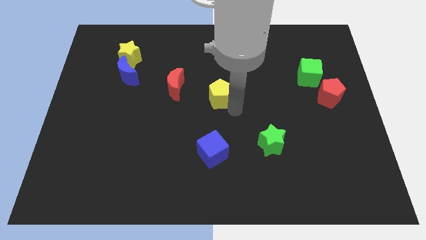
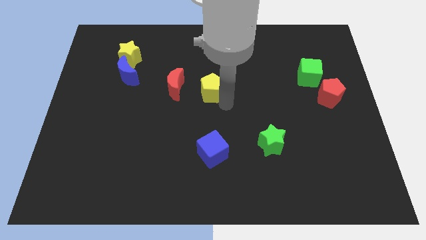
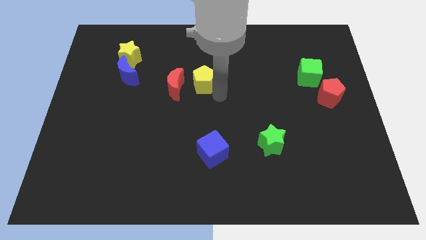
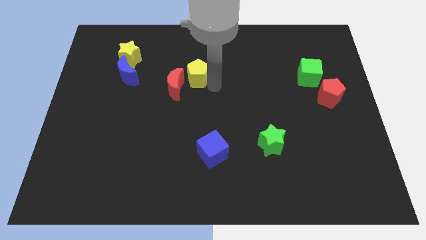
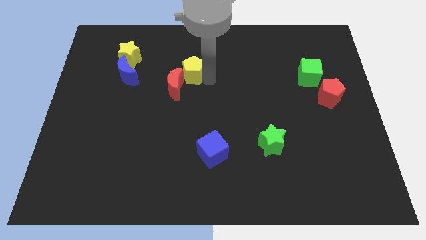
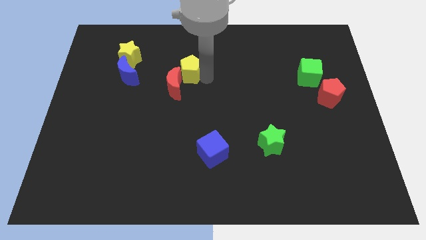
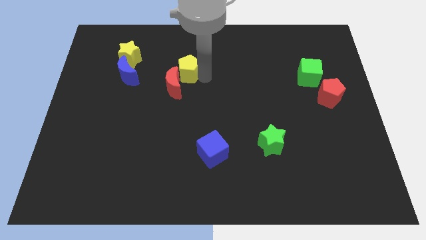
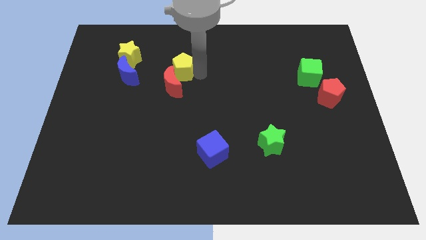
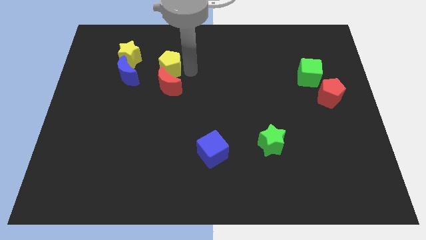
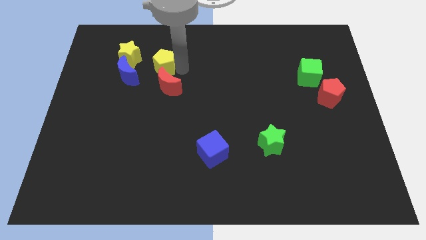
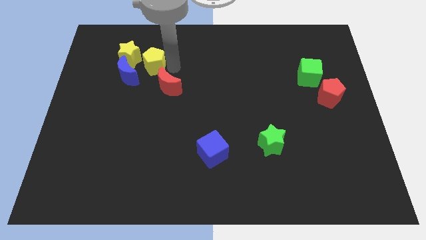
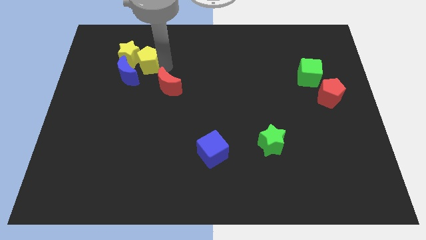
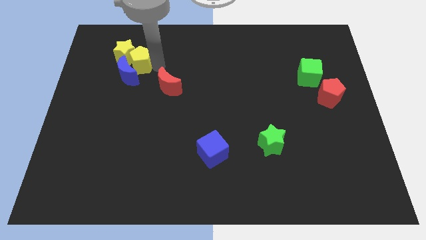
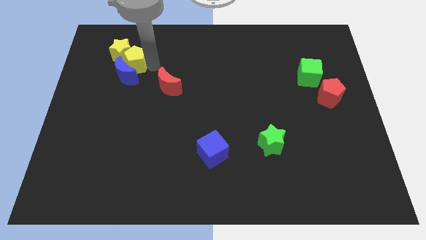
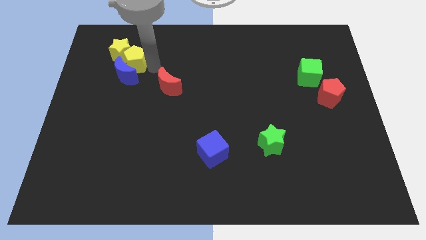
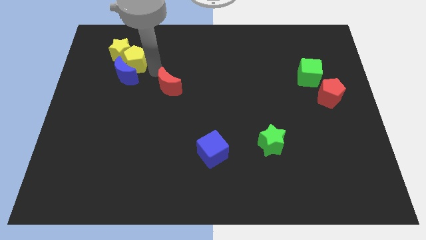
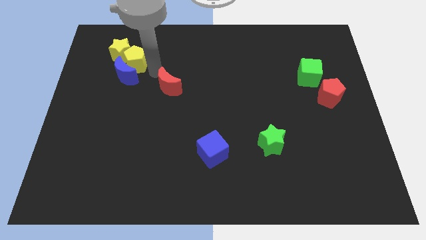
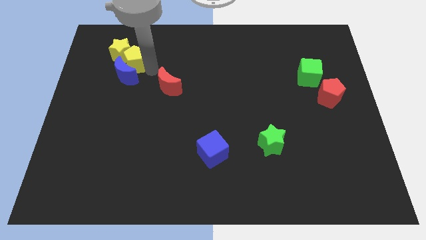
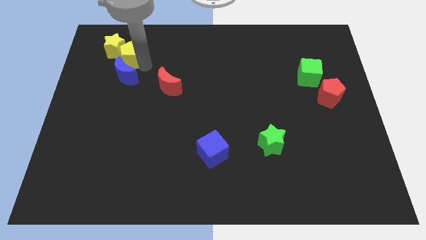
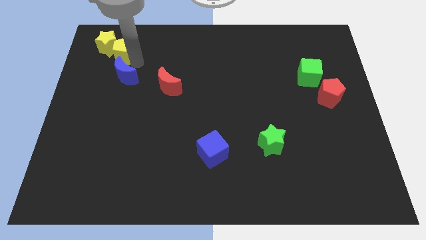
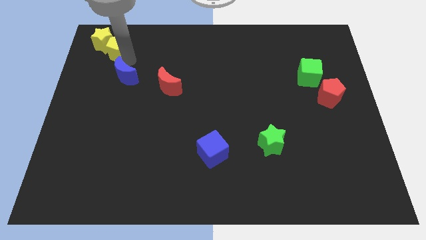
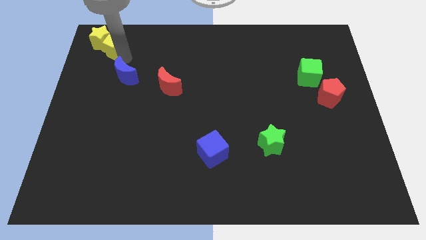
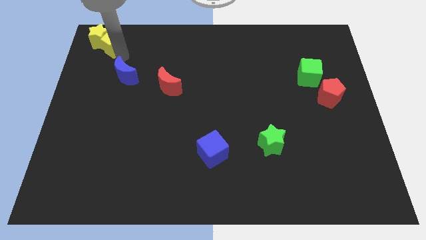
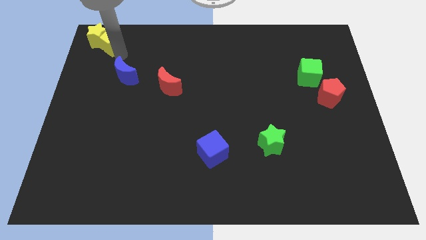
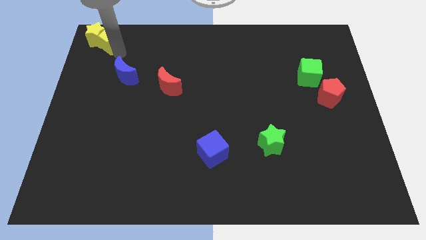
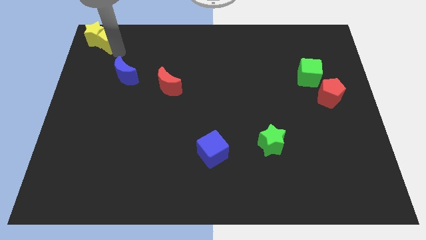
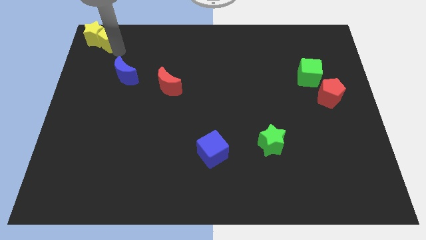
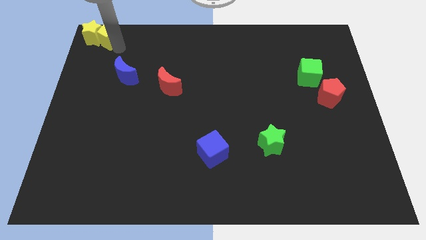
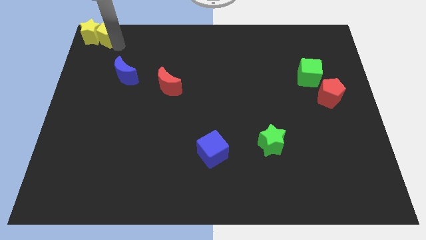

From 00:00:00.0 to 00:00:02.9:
push the yellow blocks to the top left corner of the board

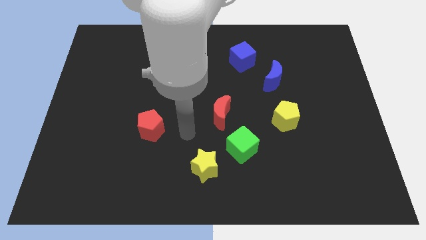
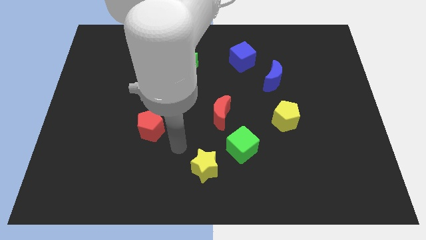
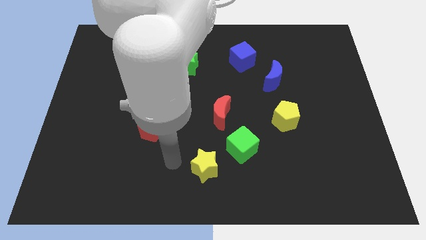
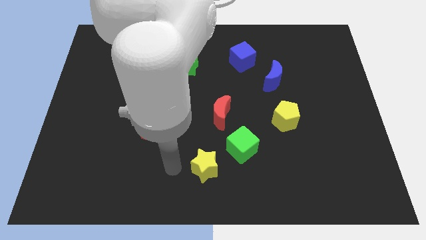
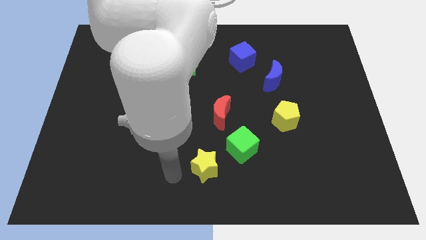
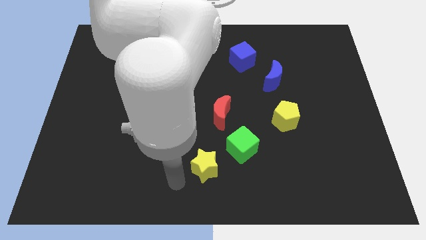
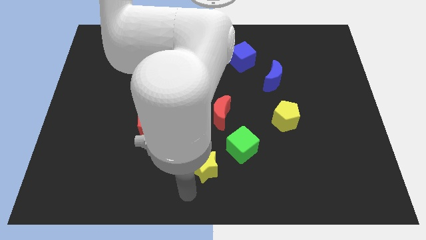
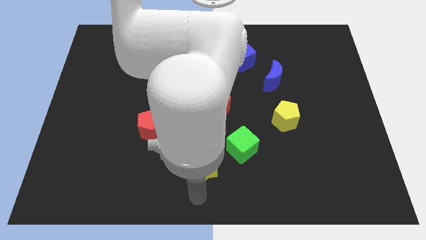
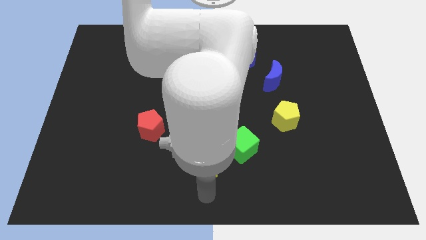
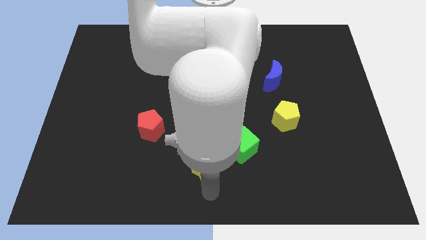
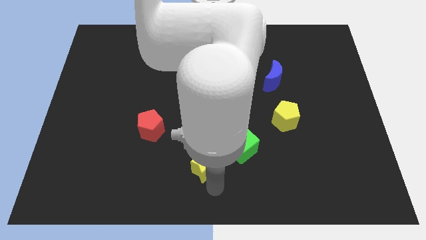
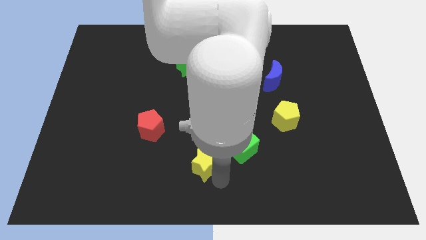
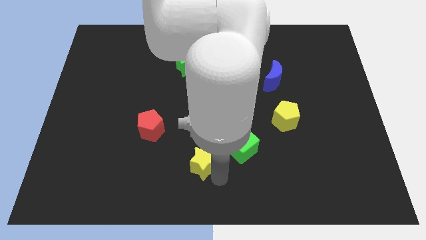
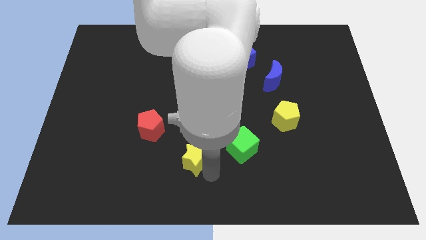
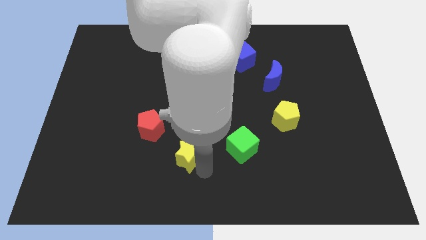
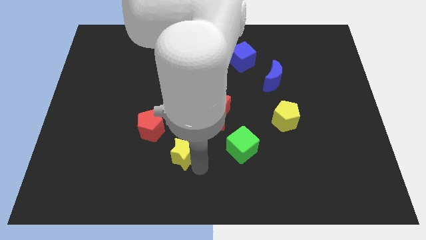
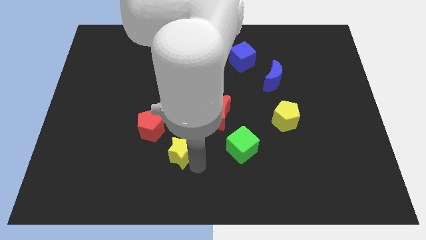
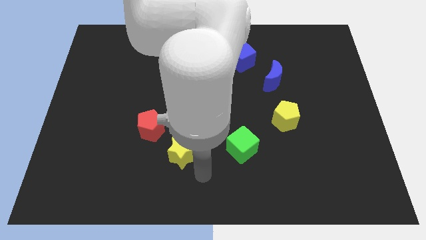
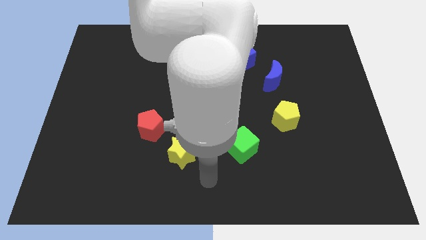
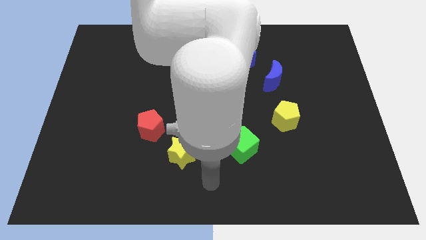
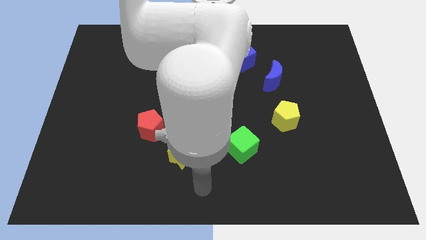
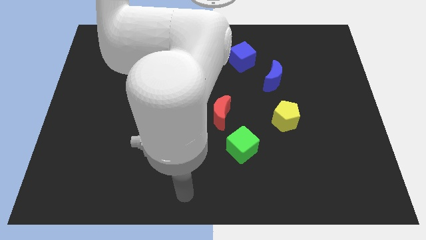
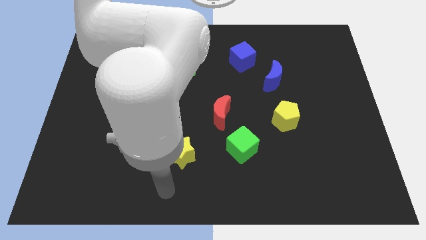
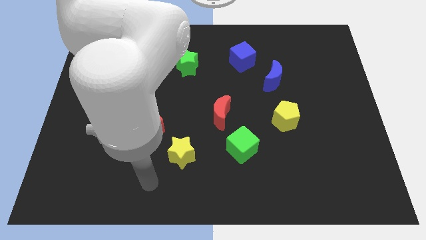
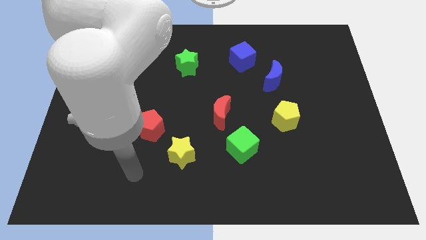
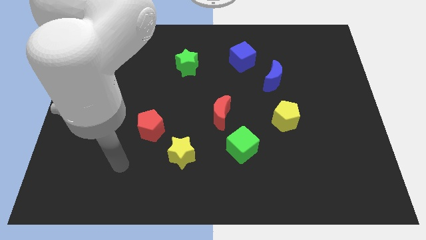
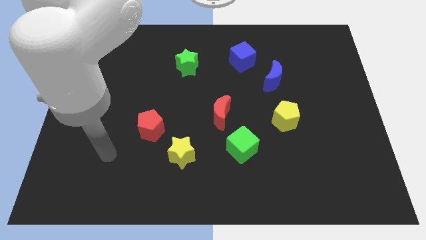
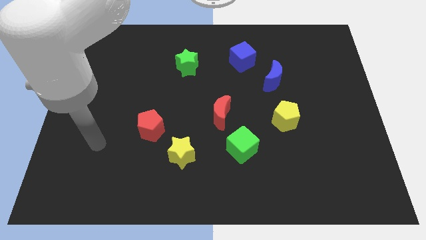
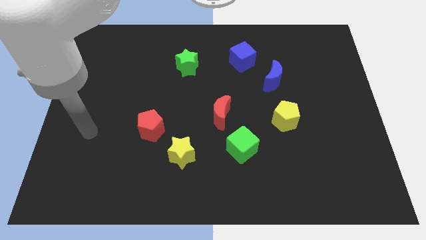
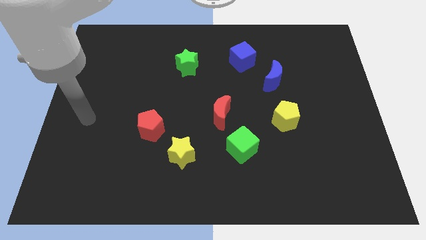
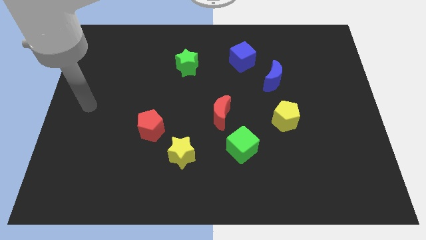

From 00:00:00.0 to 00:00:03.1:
place the yellow star below the green star

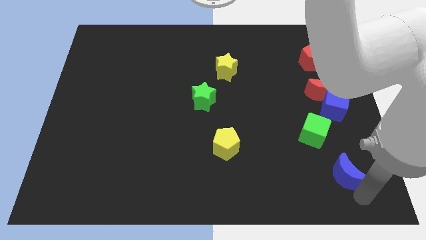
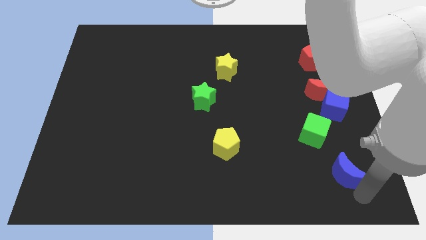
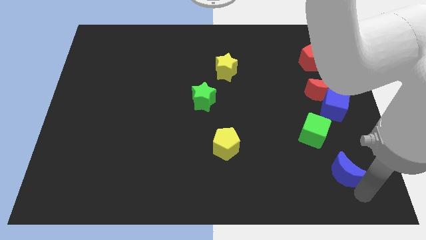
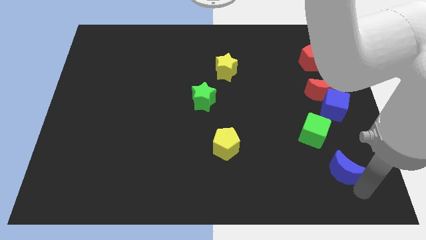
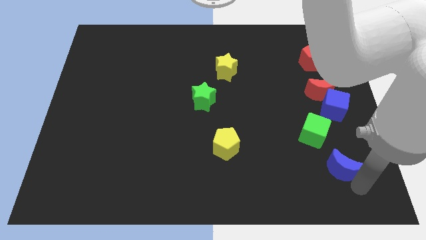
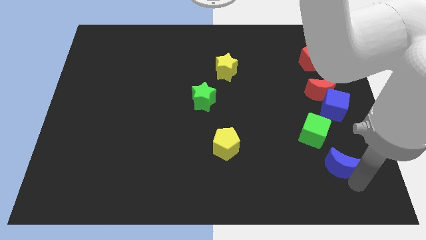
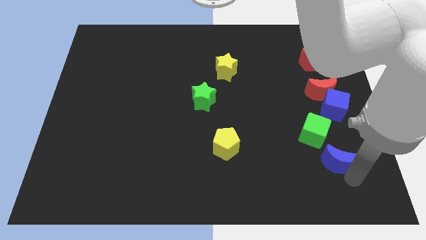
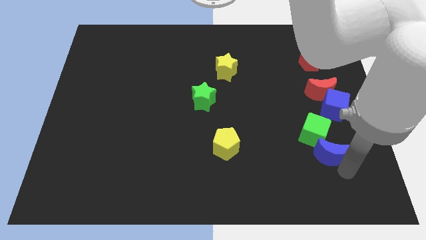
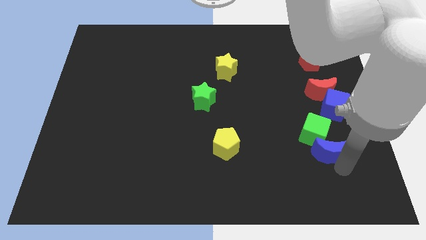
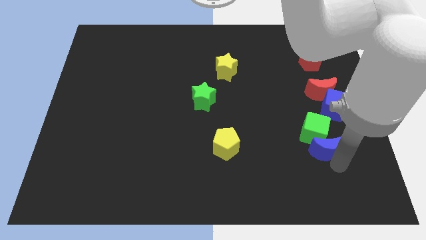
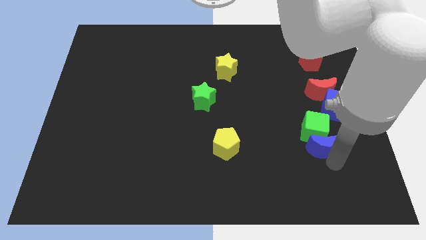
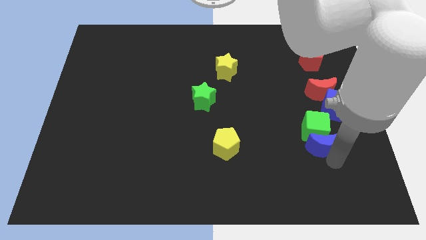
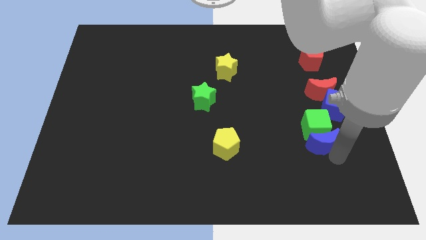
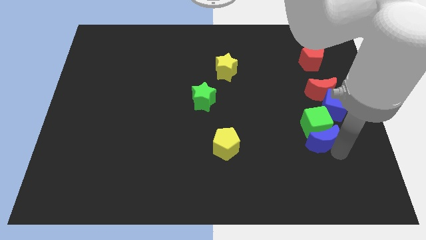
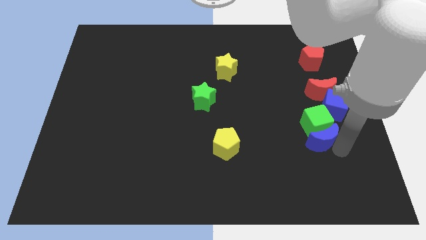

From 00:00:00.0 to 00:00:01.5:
push the blue moon into the green cube

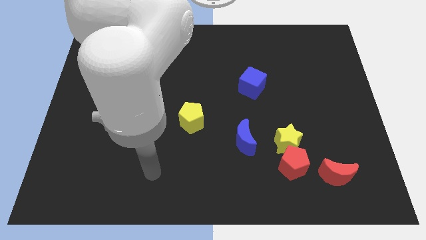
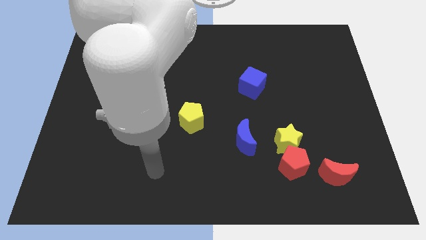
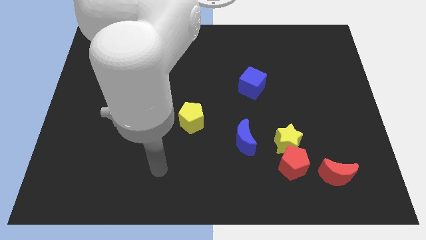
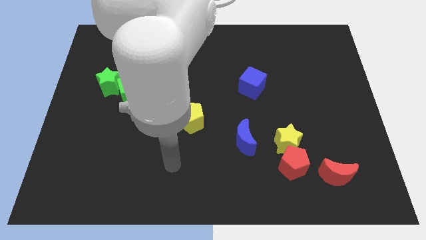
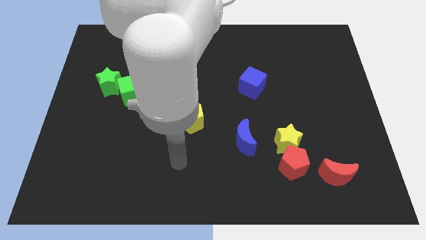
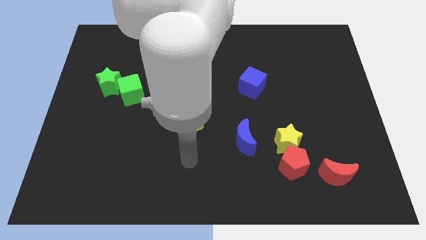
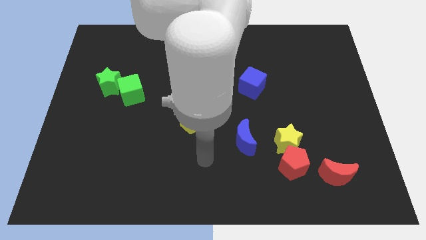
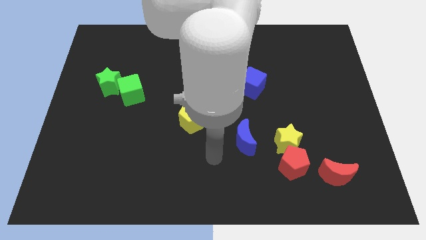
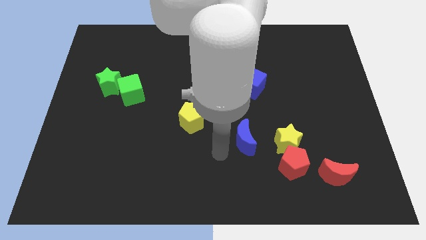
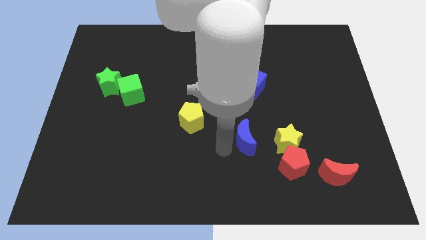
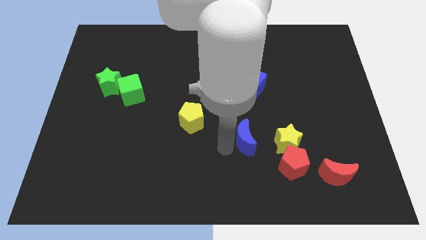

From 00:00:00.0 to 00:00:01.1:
point your arm at the left of the blue crescent

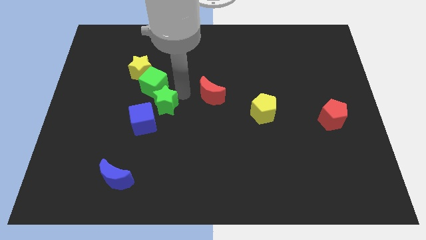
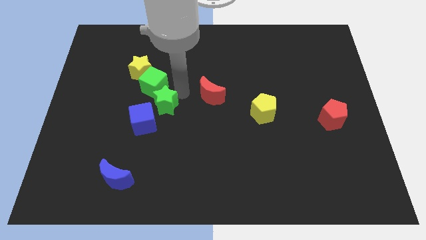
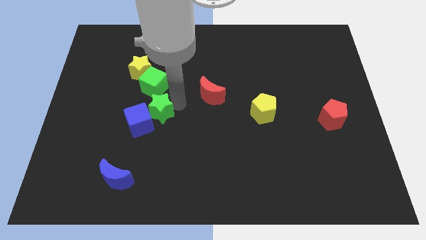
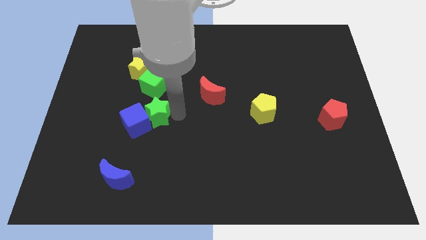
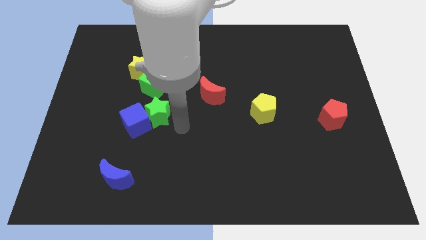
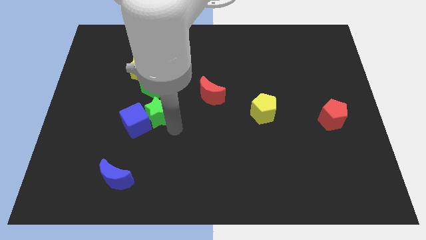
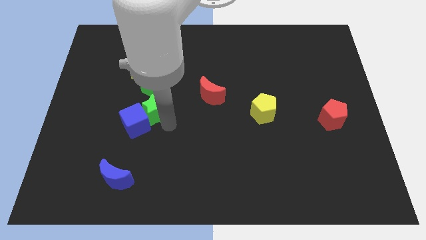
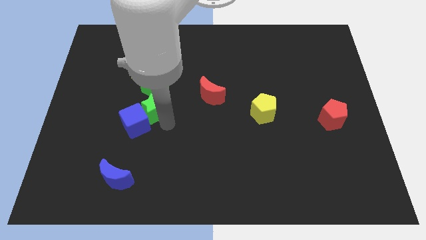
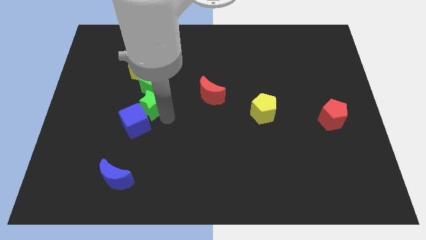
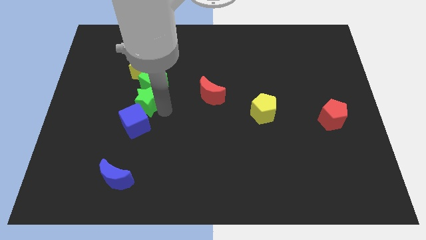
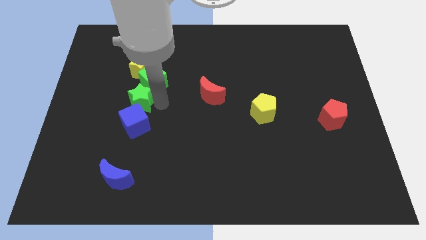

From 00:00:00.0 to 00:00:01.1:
put the green star in between the green cube and blue cube
